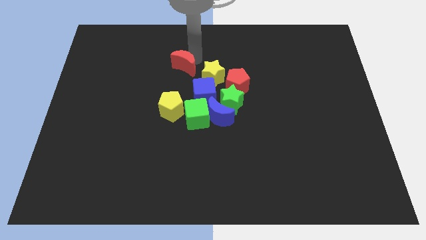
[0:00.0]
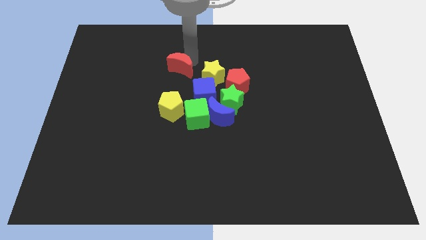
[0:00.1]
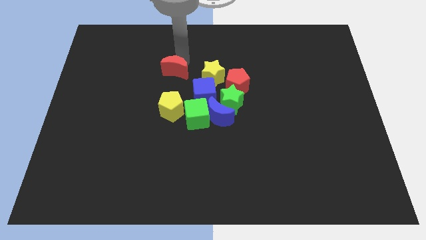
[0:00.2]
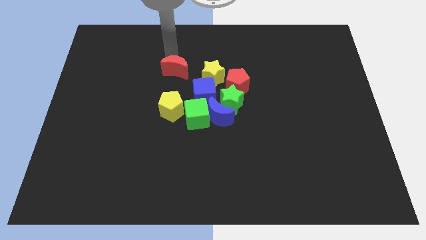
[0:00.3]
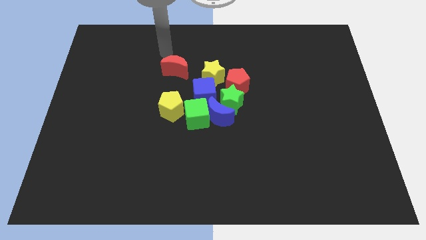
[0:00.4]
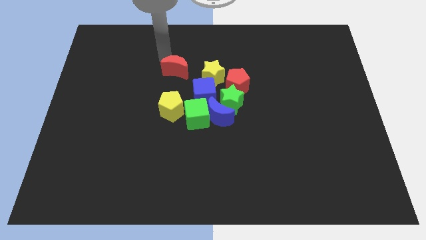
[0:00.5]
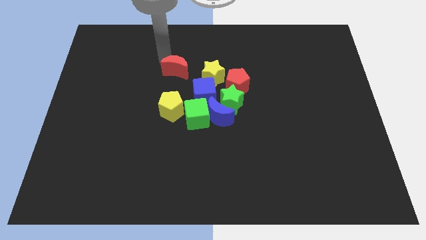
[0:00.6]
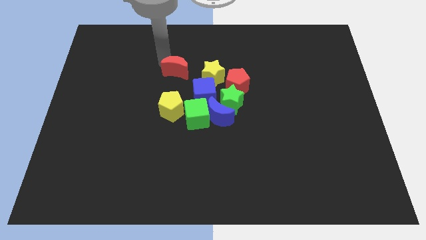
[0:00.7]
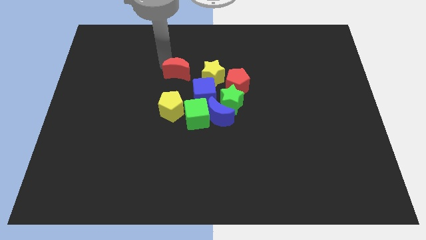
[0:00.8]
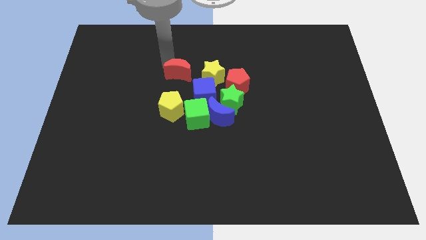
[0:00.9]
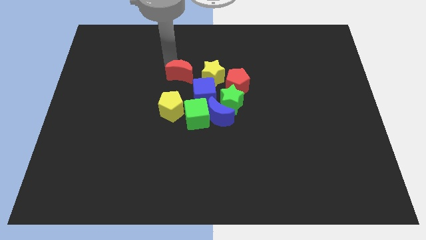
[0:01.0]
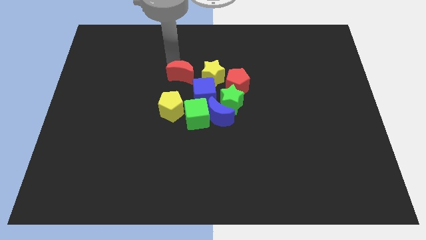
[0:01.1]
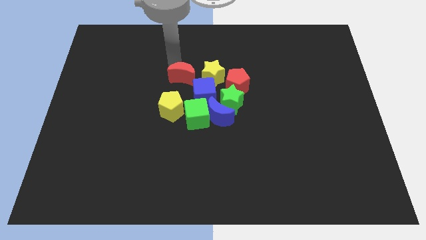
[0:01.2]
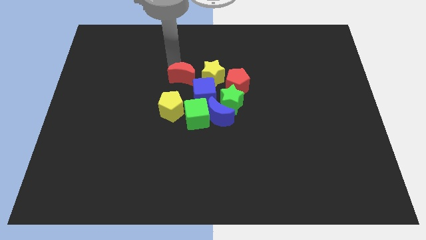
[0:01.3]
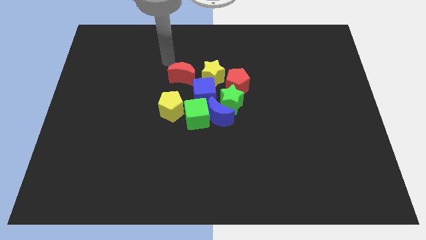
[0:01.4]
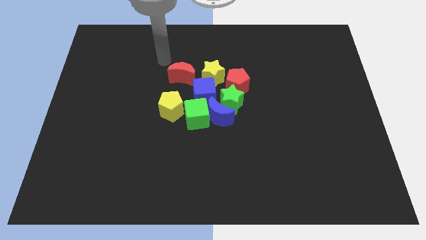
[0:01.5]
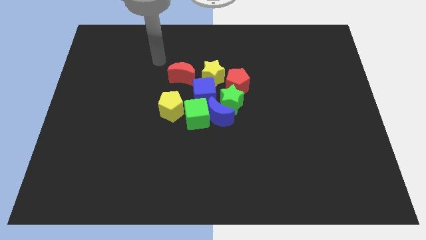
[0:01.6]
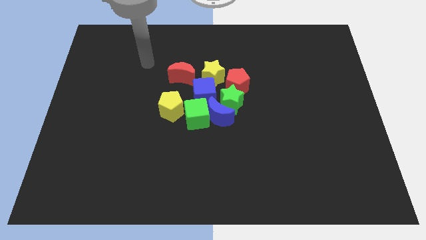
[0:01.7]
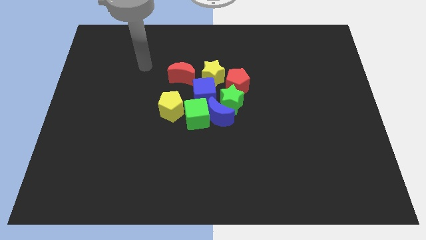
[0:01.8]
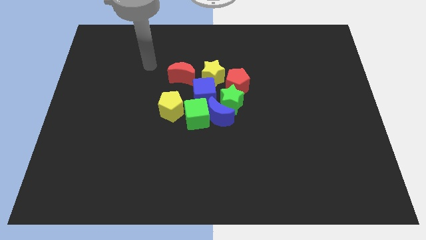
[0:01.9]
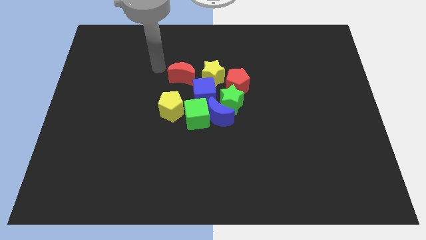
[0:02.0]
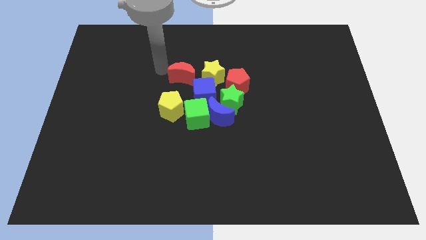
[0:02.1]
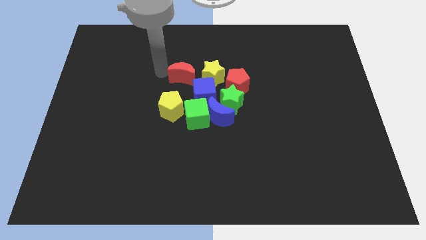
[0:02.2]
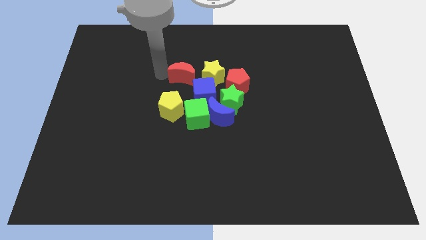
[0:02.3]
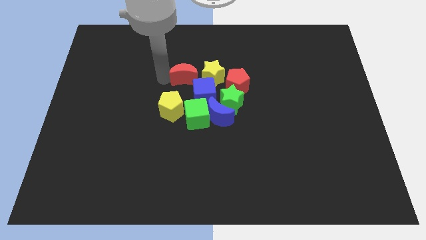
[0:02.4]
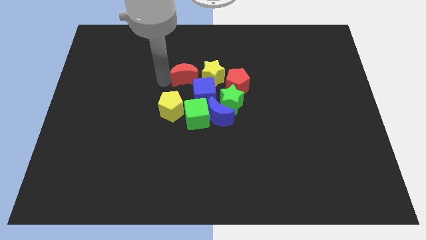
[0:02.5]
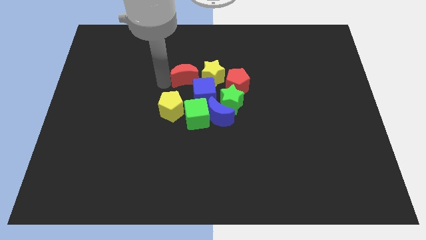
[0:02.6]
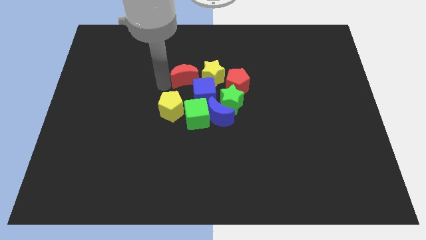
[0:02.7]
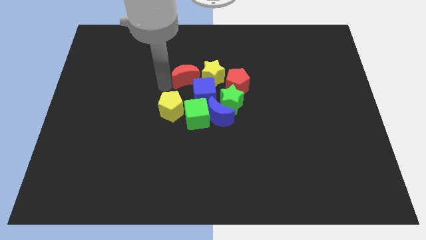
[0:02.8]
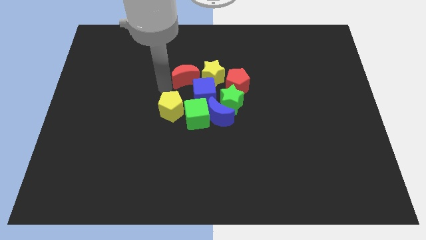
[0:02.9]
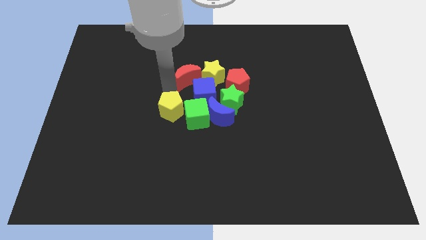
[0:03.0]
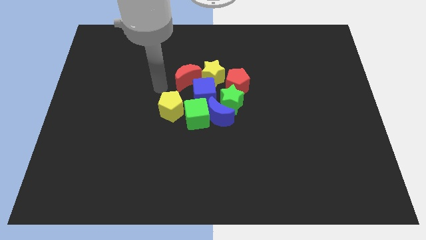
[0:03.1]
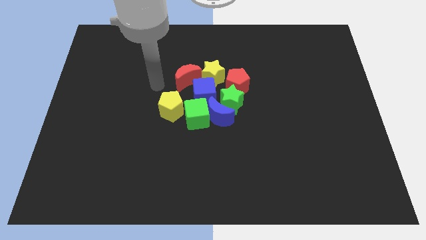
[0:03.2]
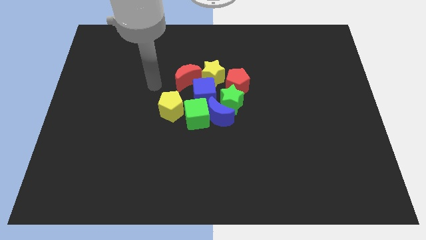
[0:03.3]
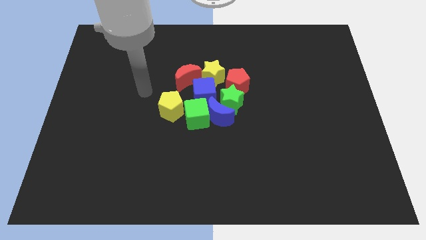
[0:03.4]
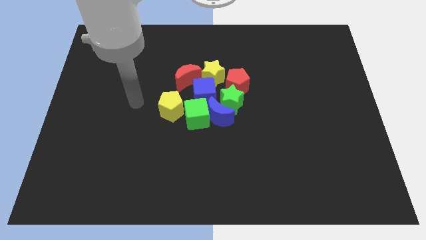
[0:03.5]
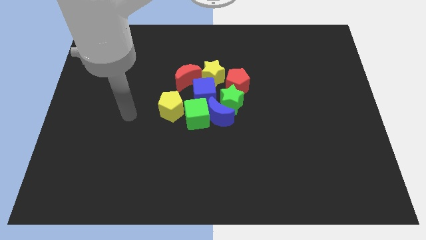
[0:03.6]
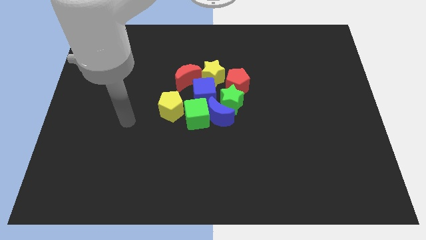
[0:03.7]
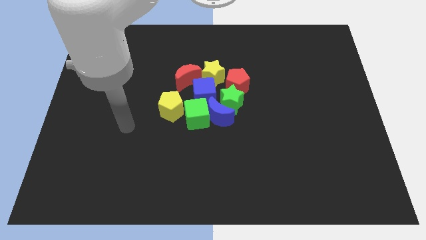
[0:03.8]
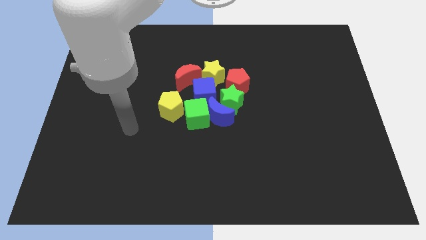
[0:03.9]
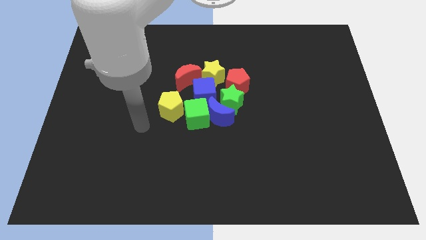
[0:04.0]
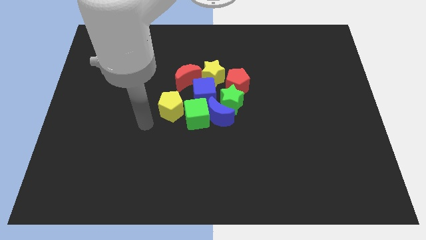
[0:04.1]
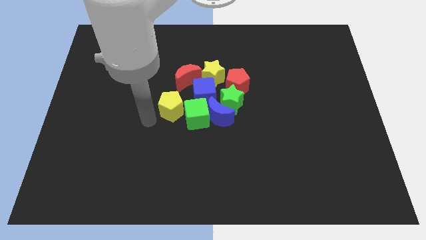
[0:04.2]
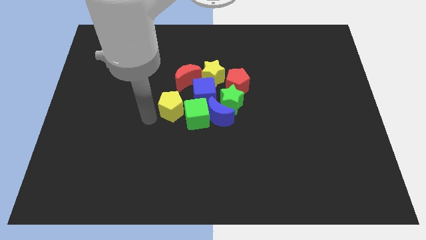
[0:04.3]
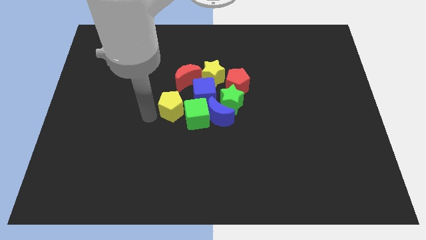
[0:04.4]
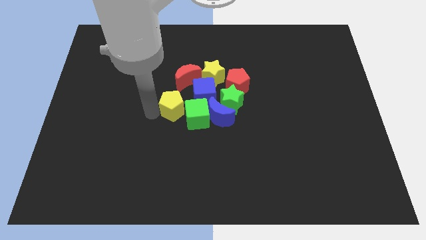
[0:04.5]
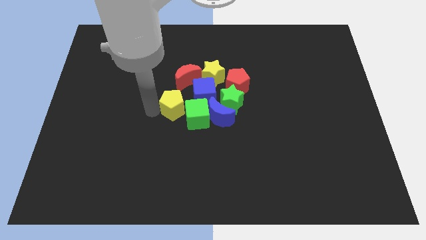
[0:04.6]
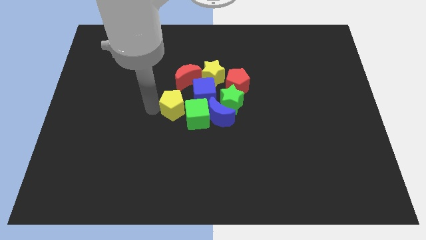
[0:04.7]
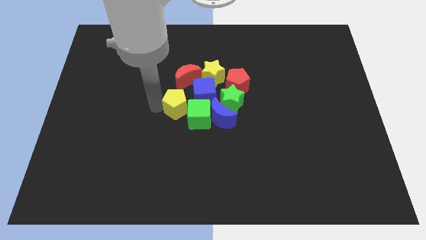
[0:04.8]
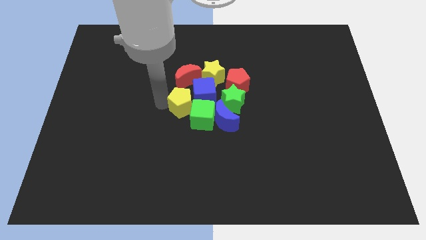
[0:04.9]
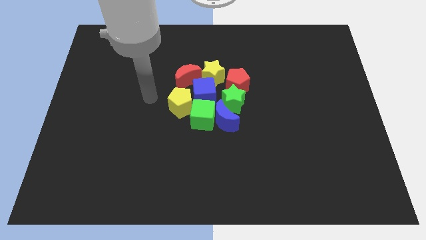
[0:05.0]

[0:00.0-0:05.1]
place red crescent close to the blue cube

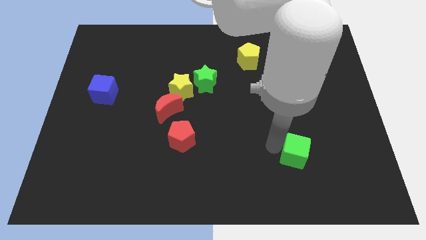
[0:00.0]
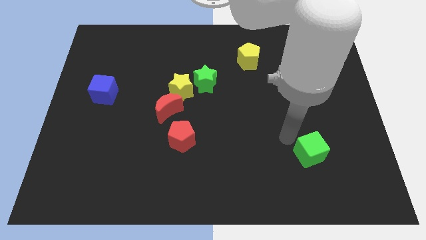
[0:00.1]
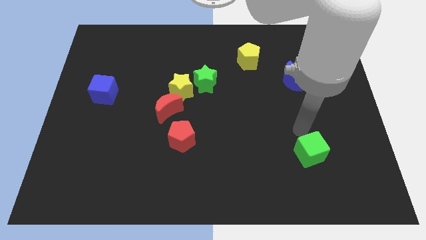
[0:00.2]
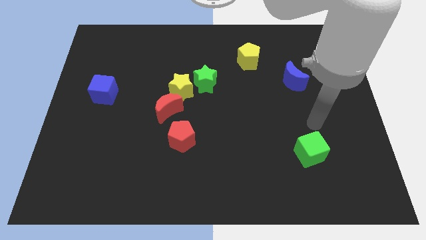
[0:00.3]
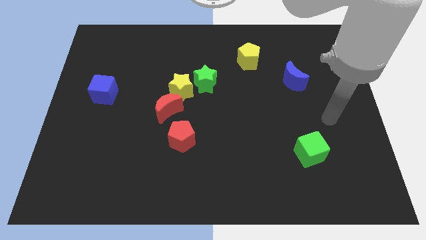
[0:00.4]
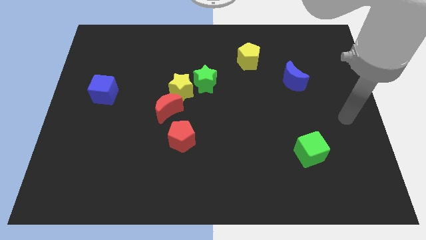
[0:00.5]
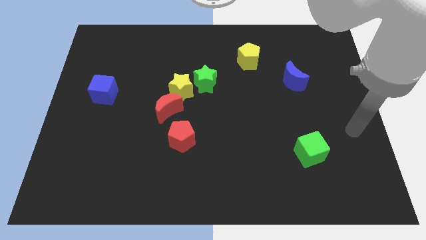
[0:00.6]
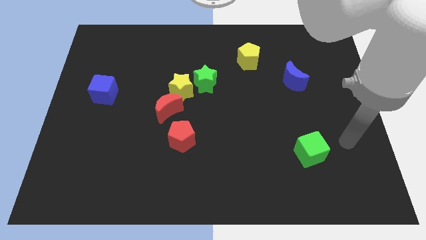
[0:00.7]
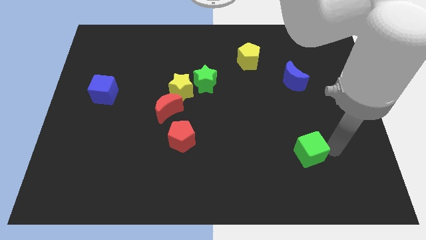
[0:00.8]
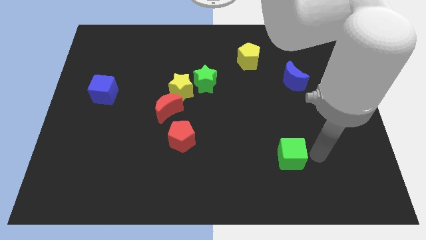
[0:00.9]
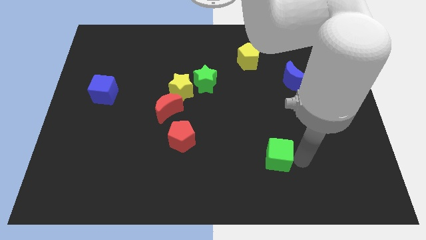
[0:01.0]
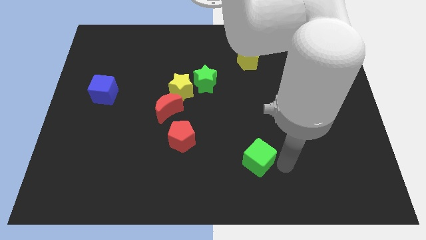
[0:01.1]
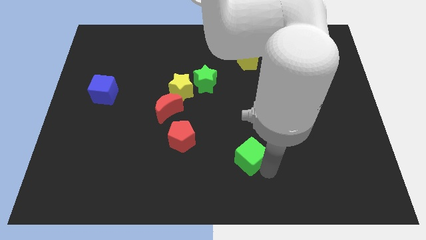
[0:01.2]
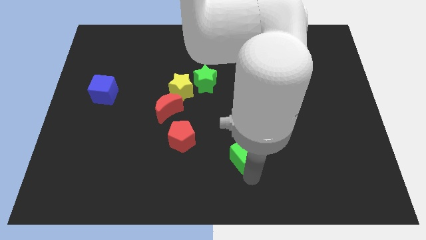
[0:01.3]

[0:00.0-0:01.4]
move the green cube slightly towards the red pentagon

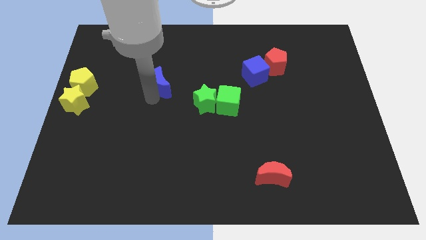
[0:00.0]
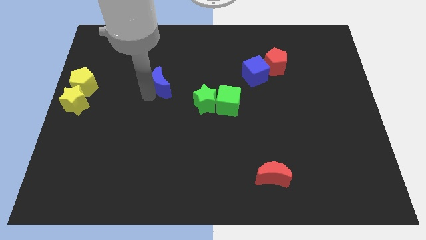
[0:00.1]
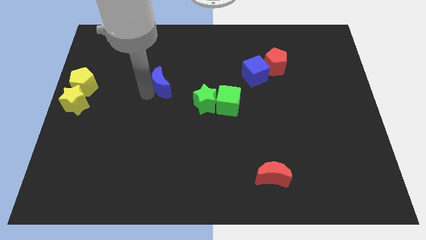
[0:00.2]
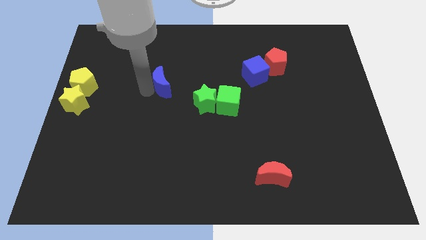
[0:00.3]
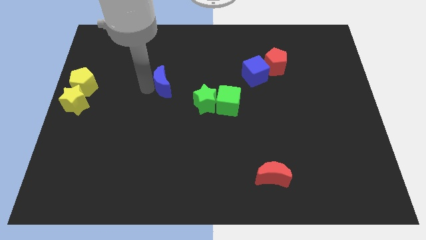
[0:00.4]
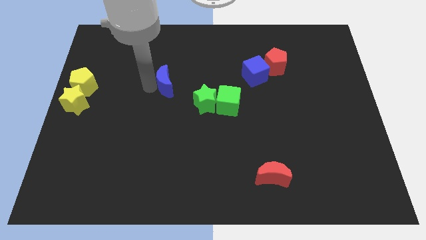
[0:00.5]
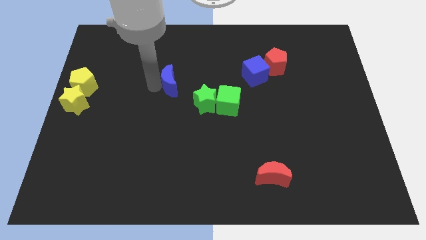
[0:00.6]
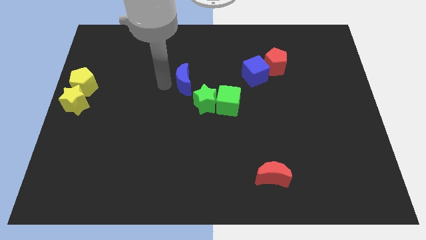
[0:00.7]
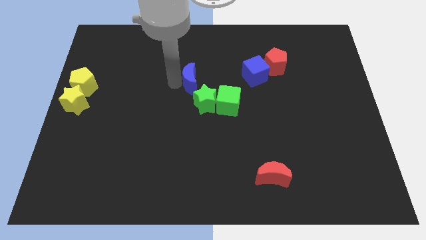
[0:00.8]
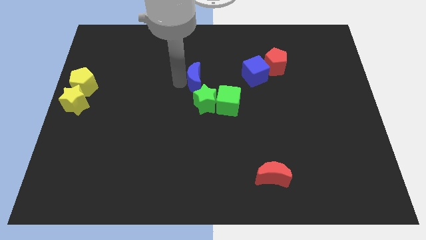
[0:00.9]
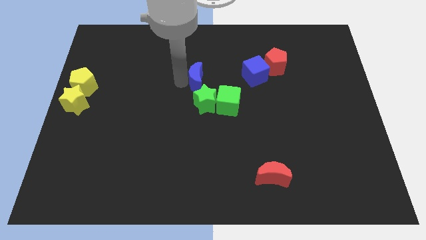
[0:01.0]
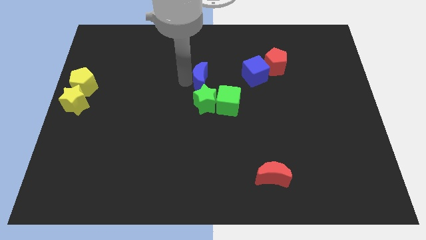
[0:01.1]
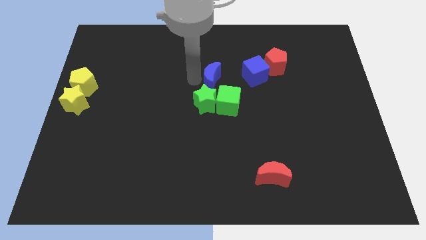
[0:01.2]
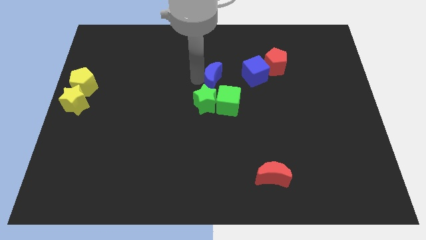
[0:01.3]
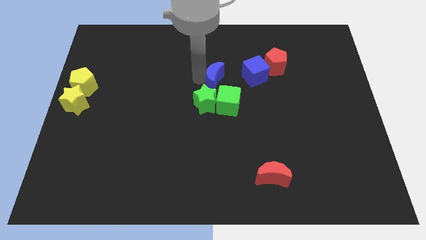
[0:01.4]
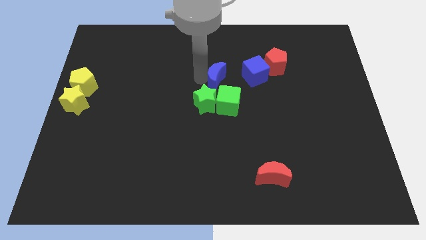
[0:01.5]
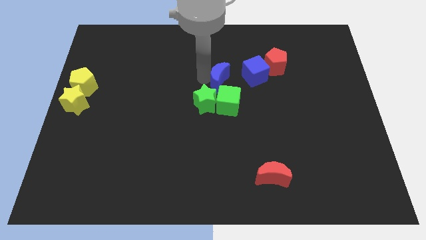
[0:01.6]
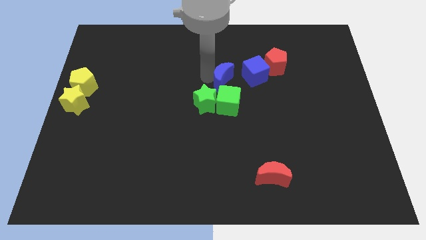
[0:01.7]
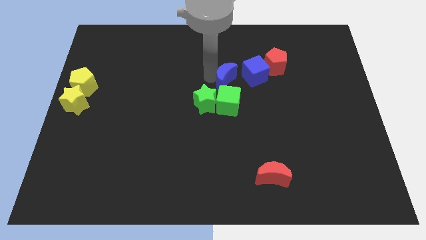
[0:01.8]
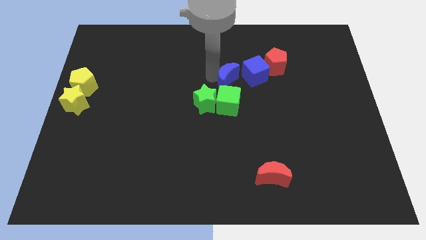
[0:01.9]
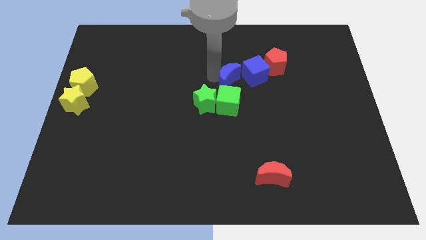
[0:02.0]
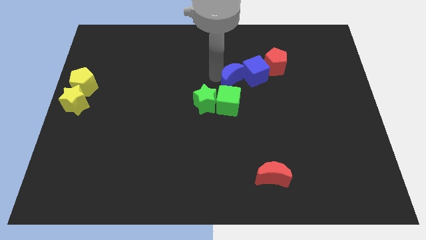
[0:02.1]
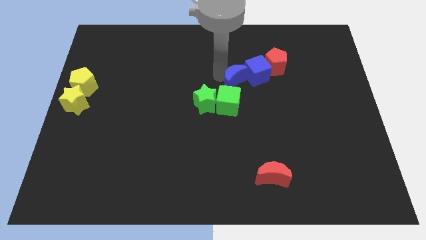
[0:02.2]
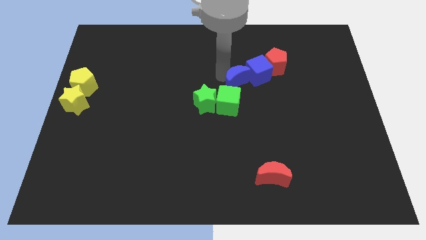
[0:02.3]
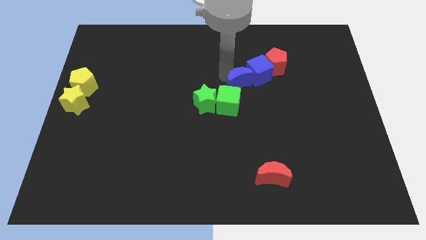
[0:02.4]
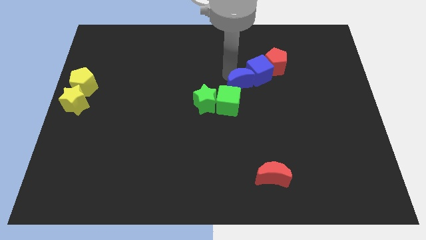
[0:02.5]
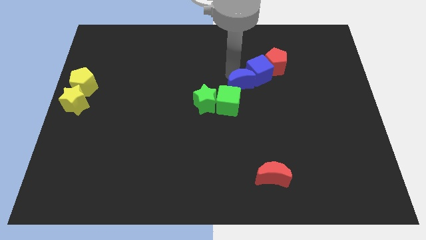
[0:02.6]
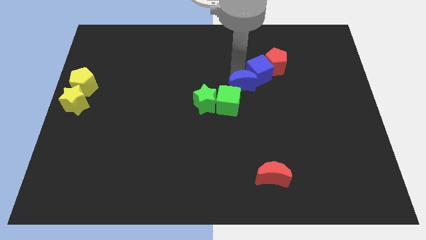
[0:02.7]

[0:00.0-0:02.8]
push the blue crescent into the blue cube
